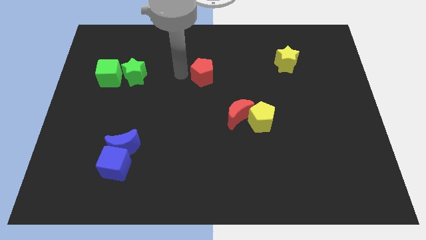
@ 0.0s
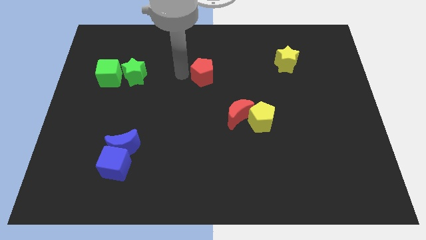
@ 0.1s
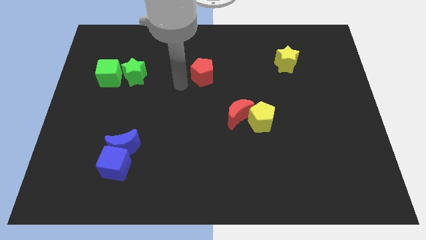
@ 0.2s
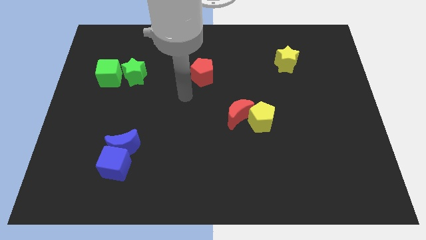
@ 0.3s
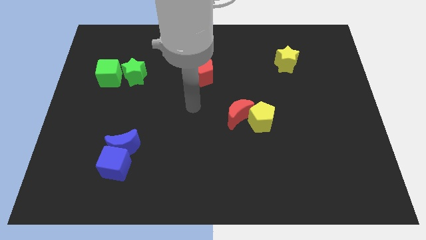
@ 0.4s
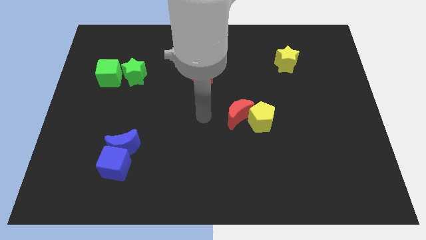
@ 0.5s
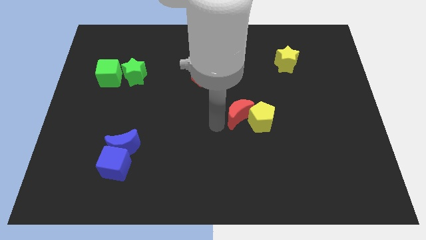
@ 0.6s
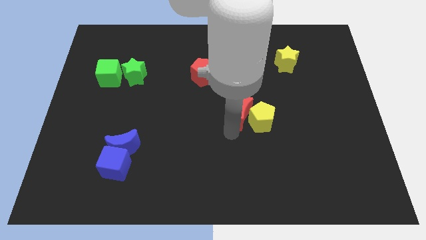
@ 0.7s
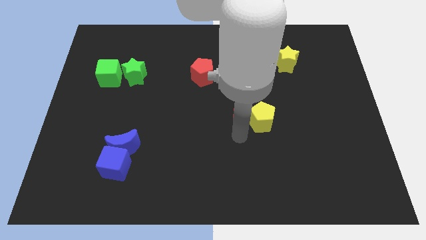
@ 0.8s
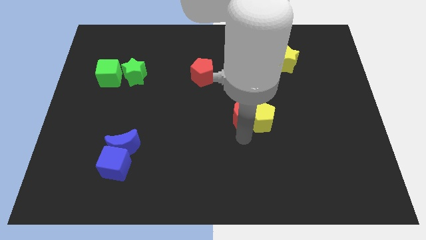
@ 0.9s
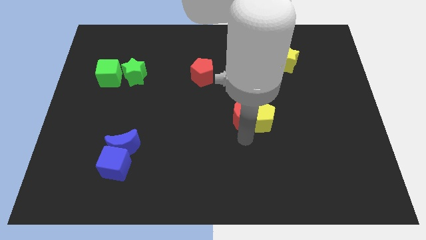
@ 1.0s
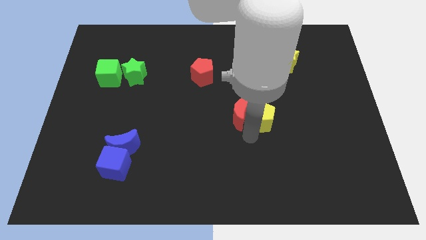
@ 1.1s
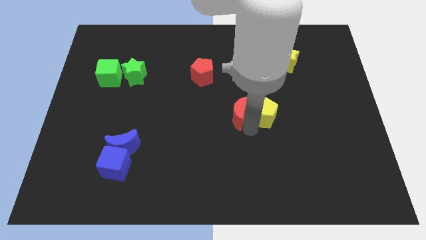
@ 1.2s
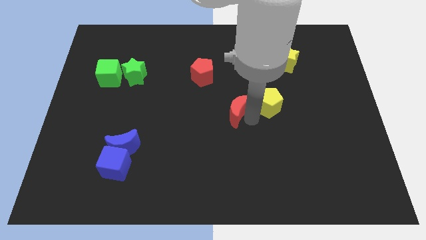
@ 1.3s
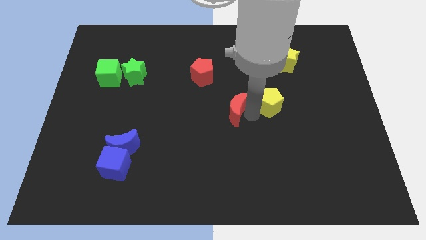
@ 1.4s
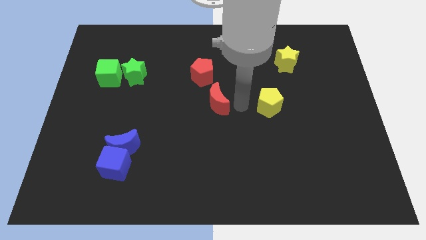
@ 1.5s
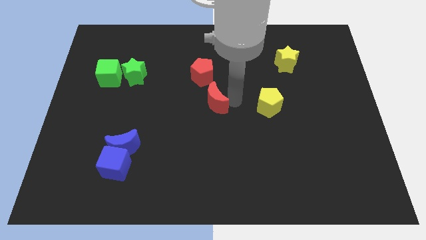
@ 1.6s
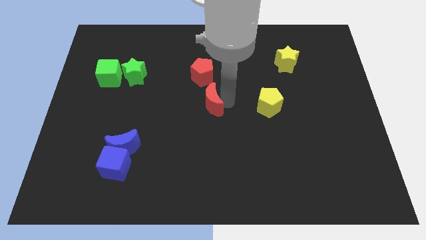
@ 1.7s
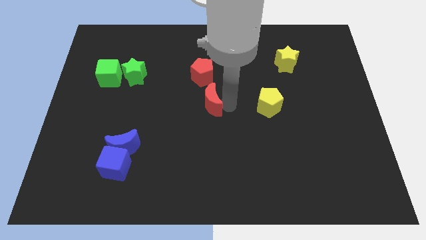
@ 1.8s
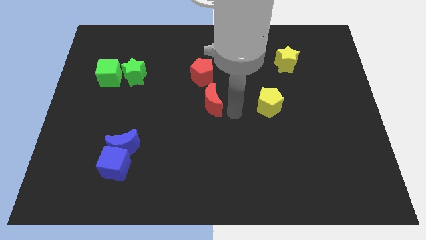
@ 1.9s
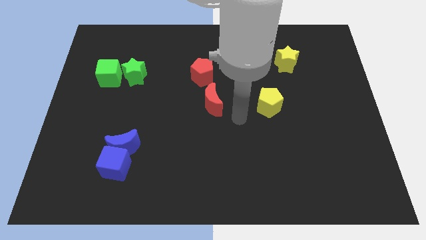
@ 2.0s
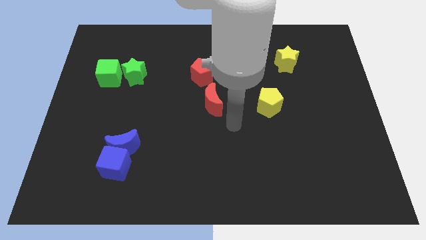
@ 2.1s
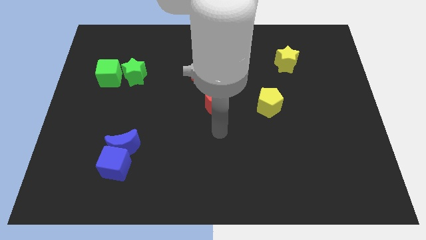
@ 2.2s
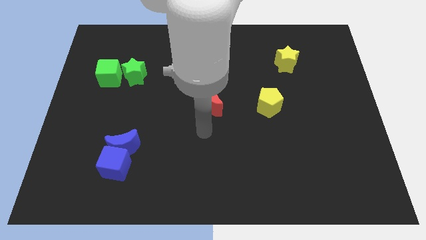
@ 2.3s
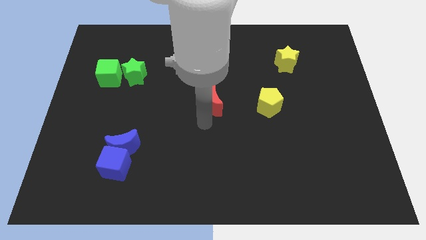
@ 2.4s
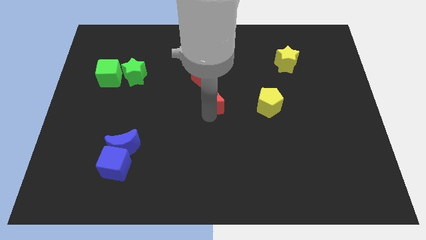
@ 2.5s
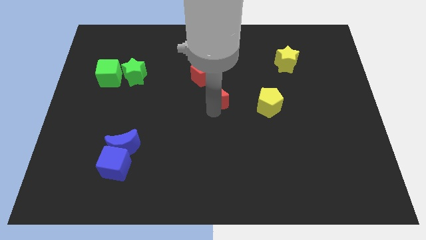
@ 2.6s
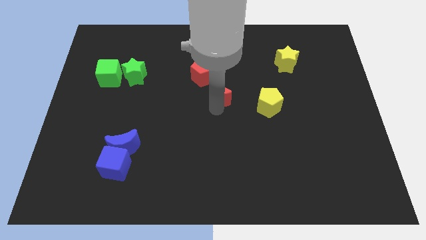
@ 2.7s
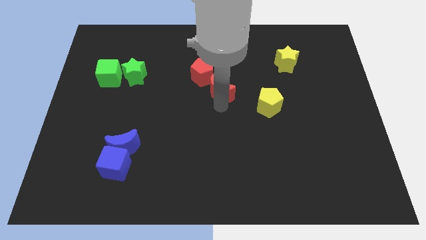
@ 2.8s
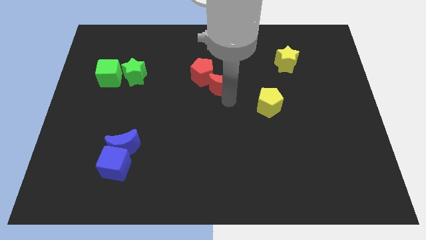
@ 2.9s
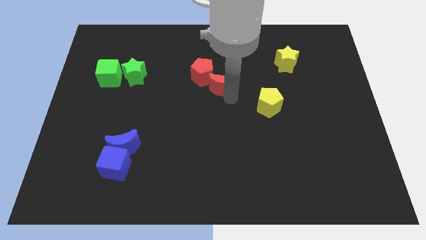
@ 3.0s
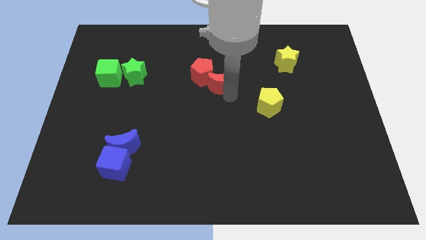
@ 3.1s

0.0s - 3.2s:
move red moon towards the right of the red pentagon

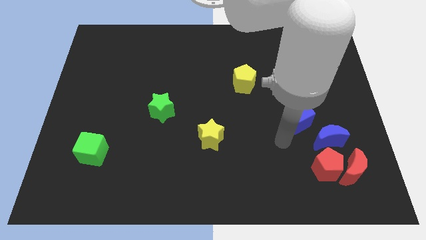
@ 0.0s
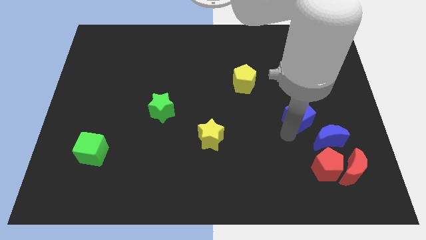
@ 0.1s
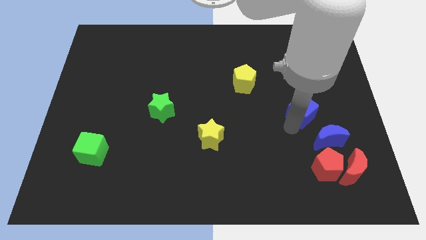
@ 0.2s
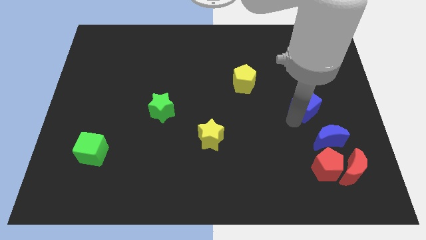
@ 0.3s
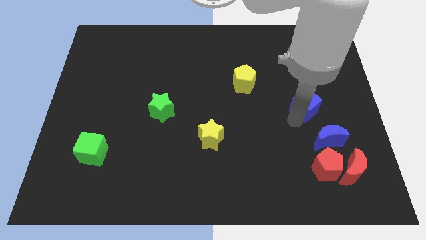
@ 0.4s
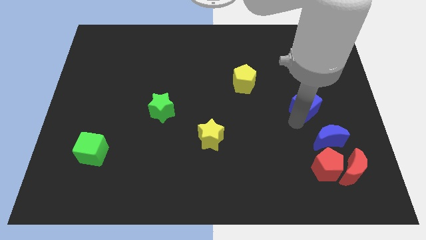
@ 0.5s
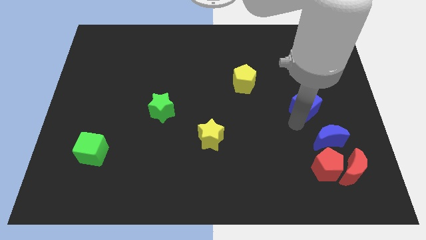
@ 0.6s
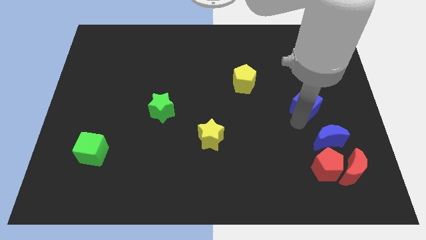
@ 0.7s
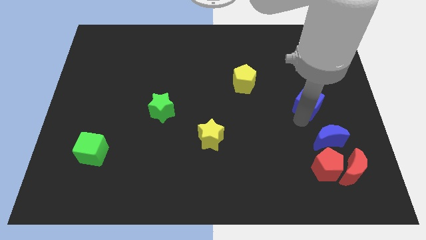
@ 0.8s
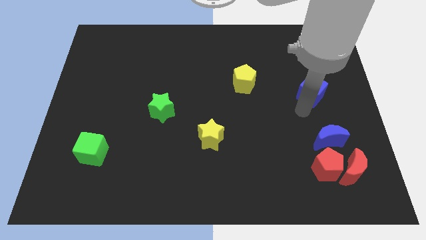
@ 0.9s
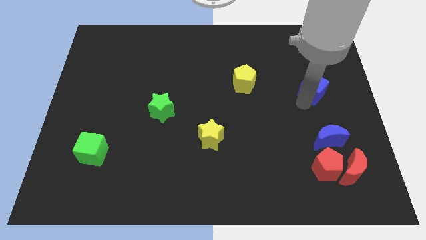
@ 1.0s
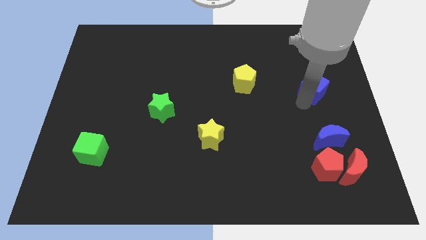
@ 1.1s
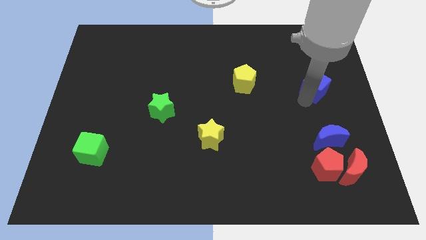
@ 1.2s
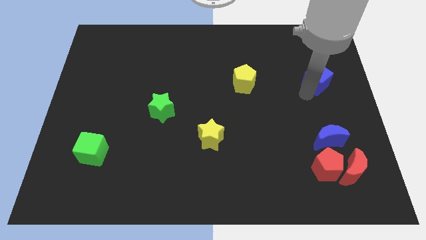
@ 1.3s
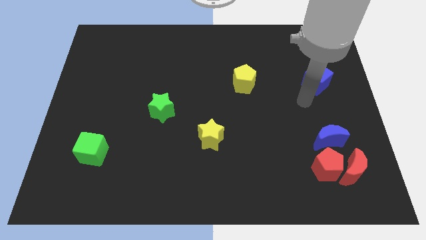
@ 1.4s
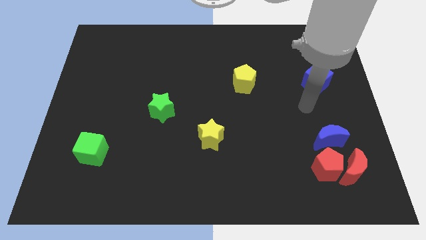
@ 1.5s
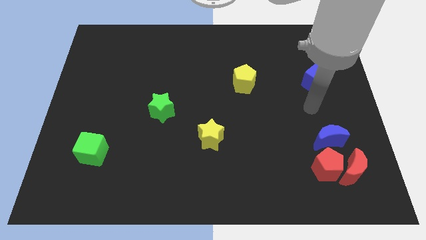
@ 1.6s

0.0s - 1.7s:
place the blue cube to the right side of the yellow pentagon

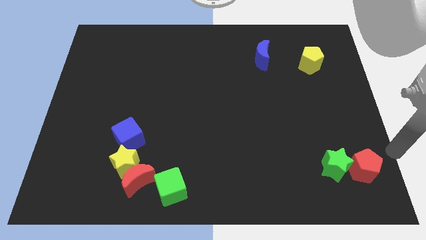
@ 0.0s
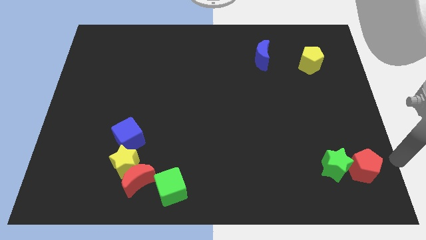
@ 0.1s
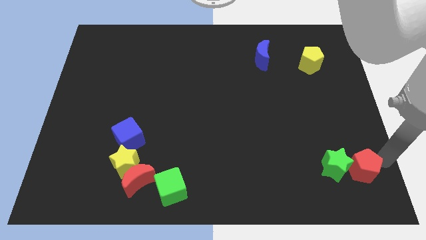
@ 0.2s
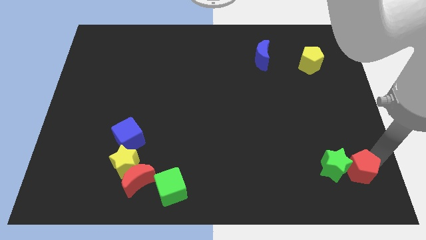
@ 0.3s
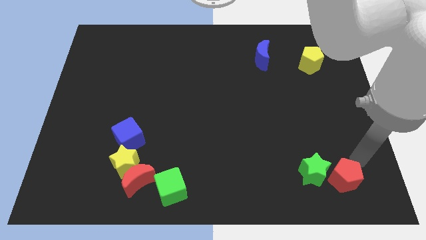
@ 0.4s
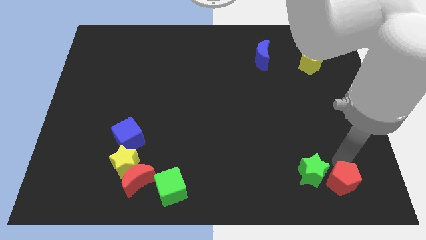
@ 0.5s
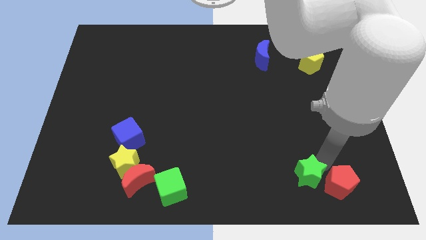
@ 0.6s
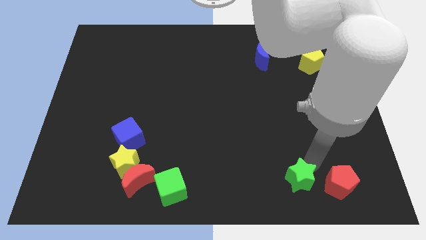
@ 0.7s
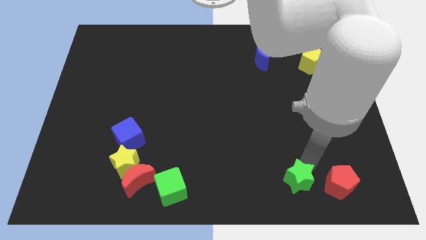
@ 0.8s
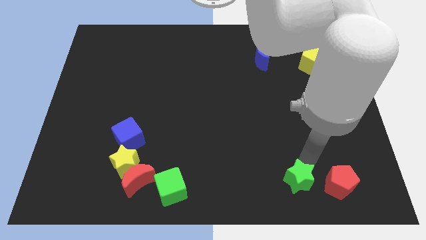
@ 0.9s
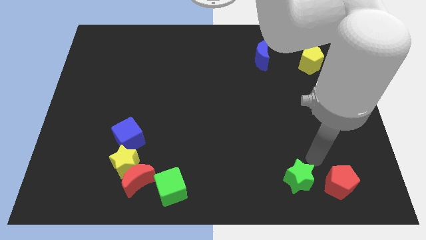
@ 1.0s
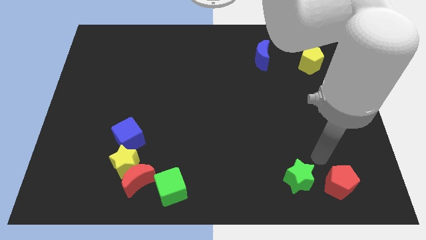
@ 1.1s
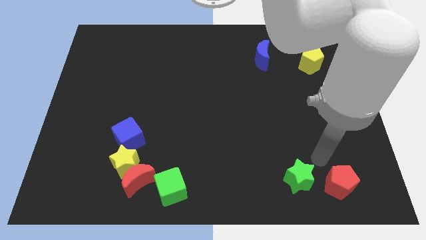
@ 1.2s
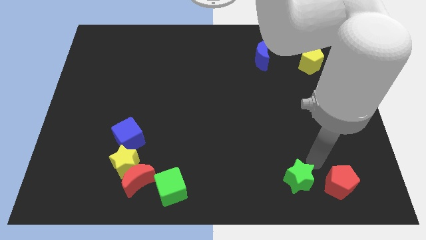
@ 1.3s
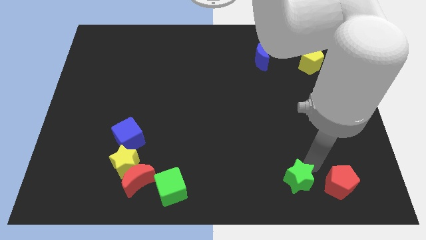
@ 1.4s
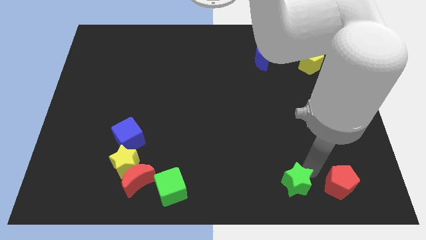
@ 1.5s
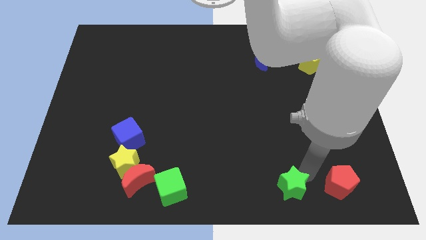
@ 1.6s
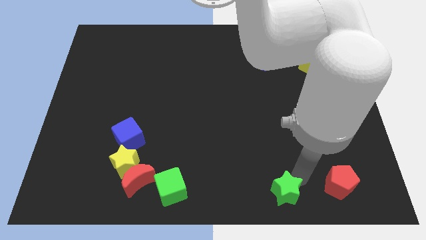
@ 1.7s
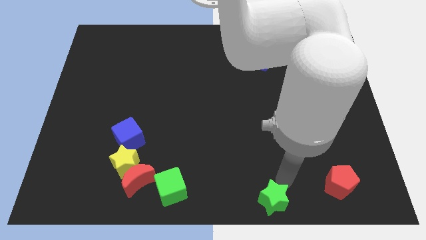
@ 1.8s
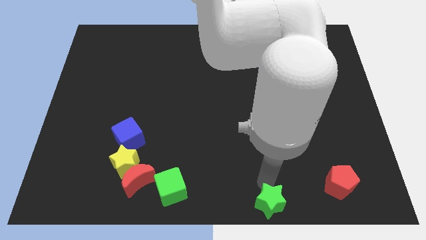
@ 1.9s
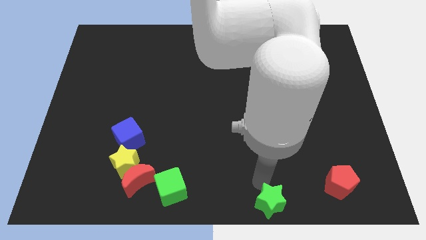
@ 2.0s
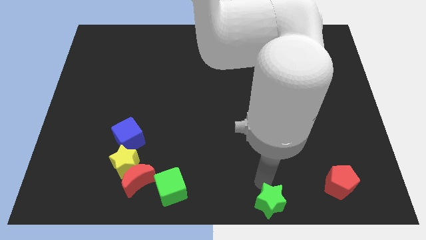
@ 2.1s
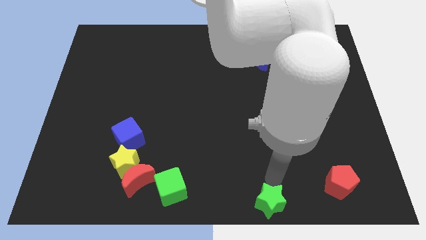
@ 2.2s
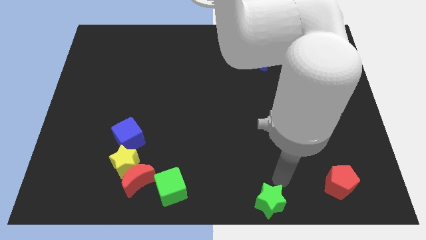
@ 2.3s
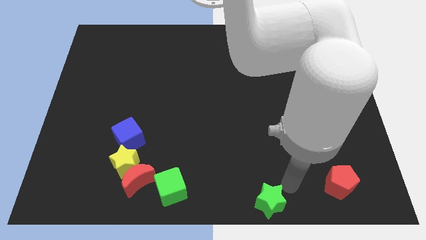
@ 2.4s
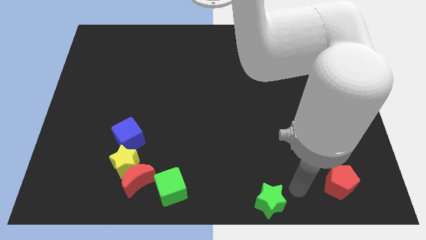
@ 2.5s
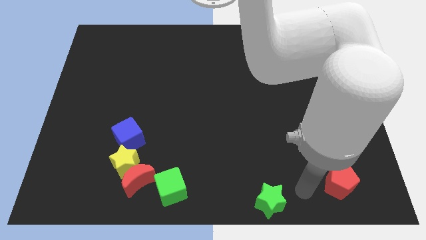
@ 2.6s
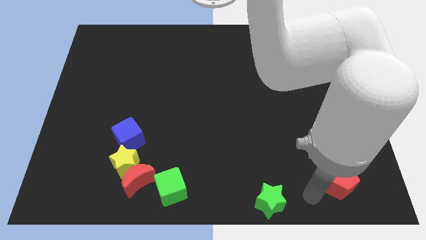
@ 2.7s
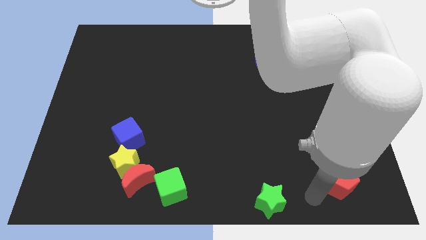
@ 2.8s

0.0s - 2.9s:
place green star to the bottom center of the board

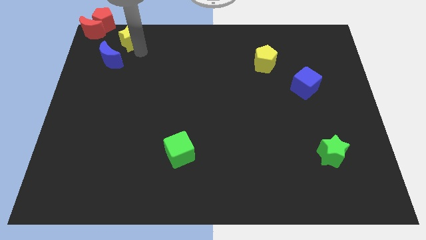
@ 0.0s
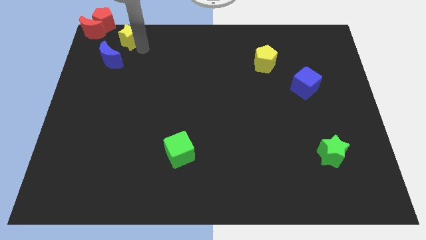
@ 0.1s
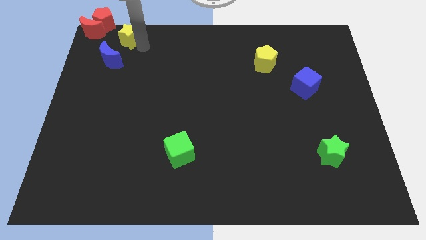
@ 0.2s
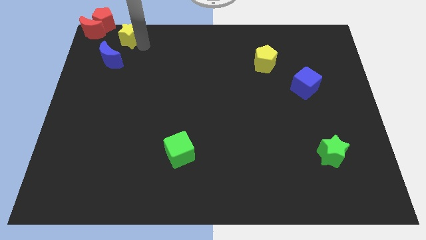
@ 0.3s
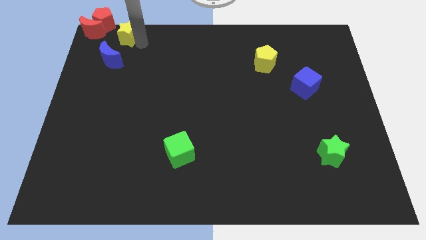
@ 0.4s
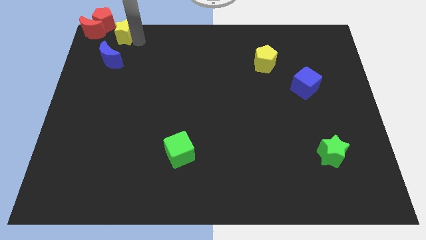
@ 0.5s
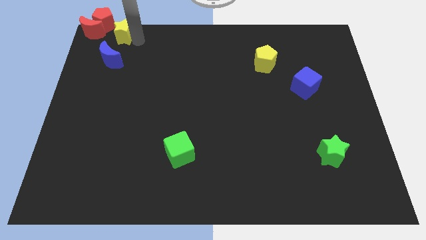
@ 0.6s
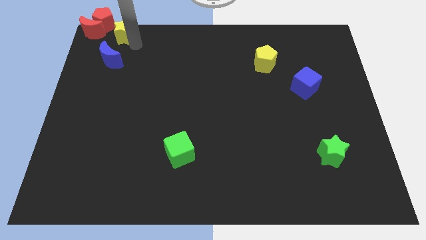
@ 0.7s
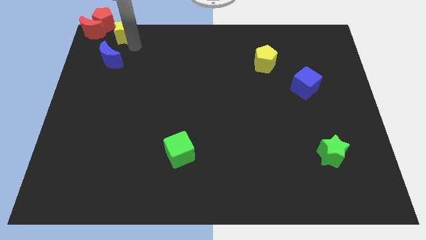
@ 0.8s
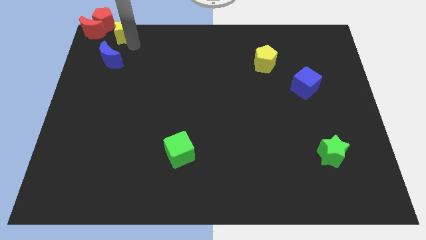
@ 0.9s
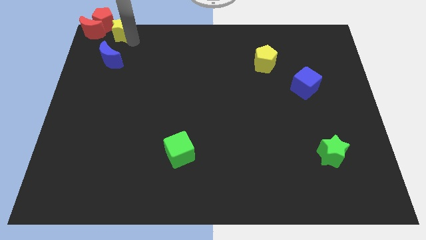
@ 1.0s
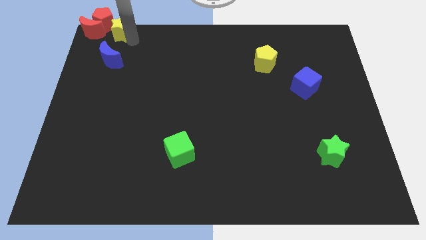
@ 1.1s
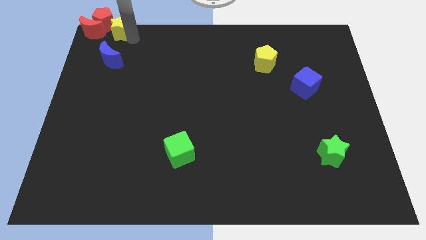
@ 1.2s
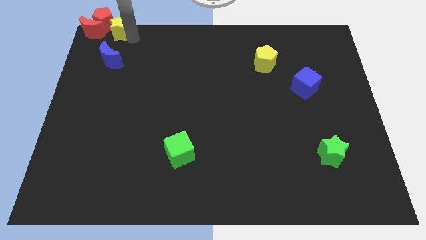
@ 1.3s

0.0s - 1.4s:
move the yellow star top left
